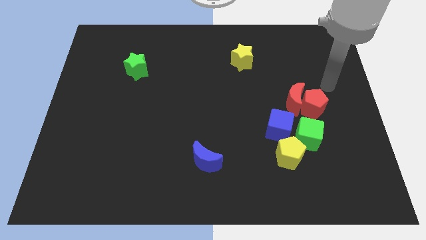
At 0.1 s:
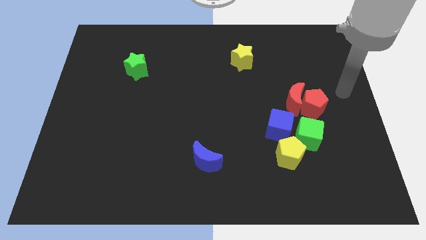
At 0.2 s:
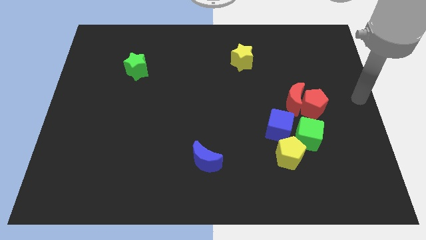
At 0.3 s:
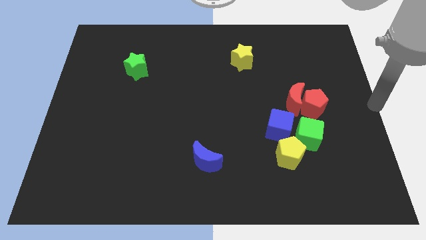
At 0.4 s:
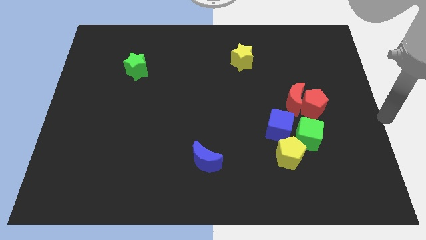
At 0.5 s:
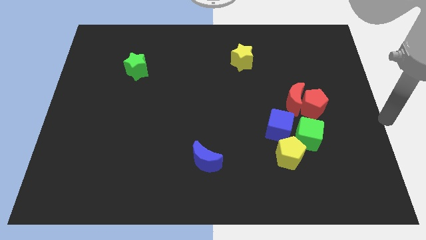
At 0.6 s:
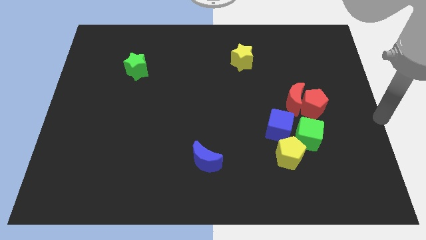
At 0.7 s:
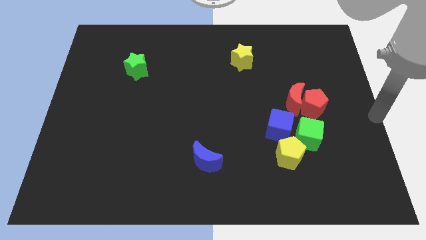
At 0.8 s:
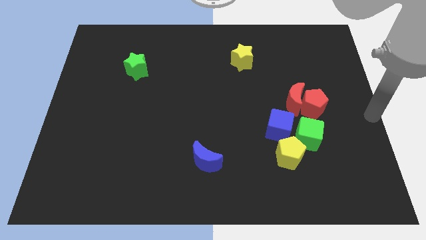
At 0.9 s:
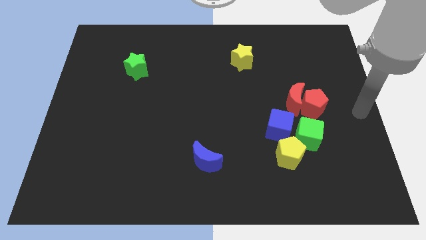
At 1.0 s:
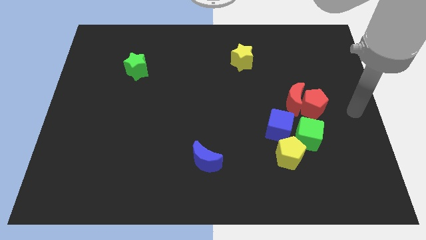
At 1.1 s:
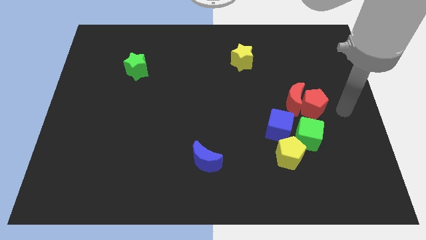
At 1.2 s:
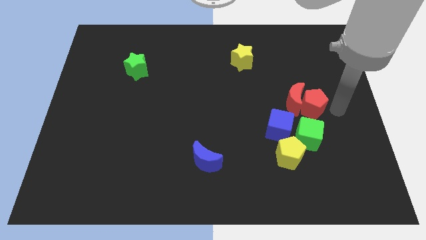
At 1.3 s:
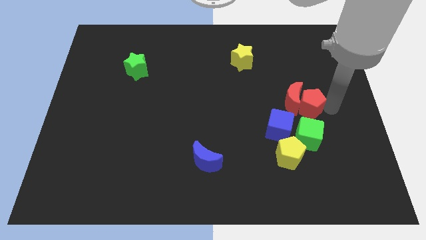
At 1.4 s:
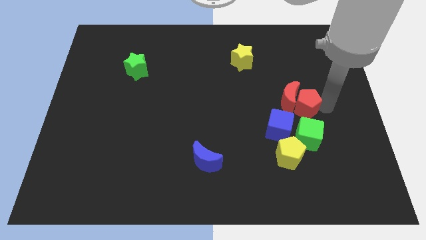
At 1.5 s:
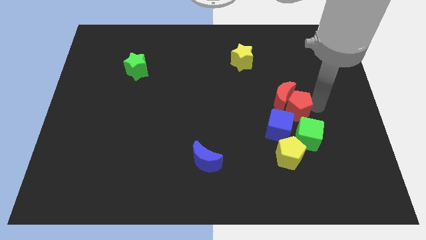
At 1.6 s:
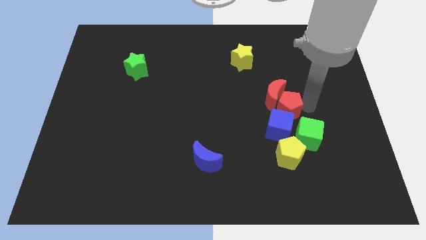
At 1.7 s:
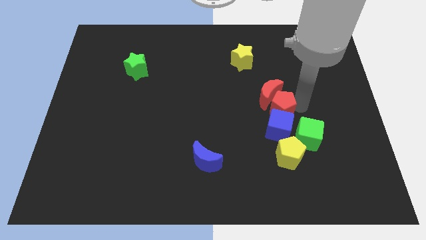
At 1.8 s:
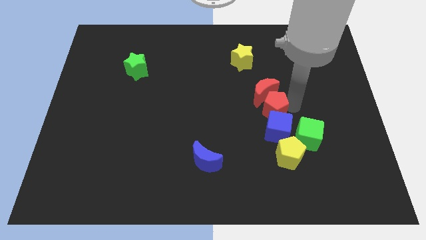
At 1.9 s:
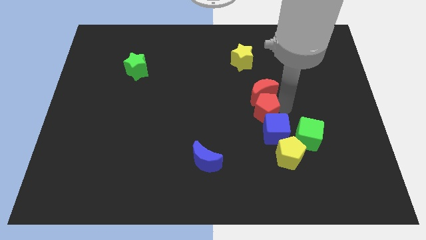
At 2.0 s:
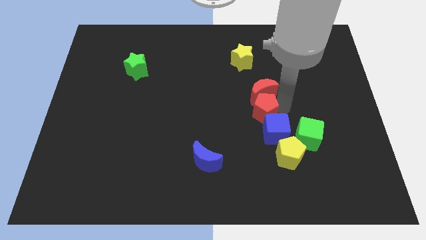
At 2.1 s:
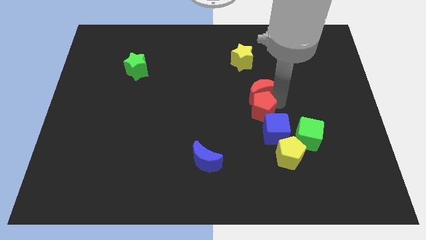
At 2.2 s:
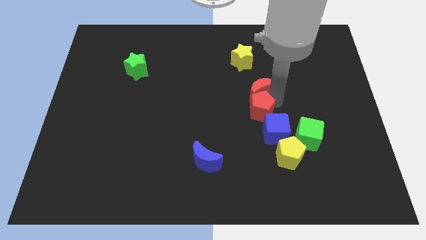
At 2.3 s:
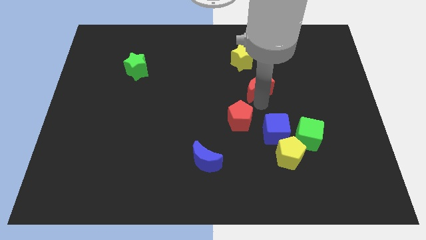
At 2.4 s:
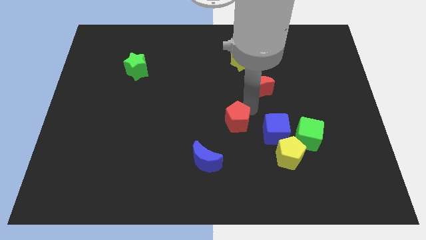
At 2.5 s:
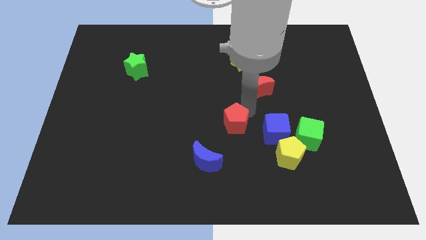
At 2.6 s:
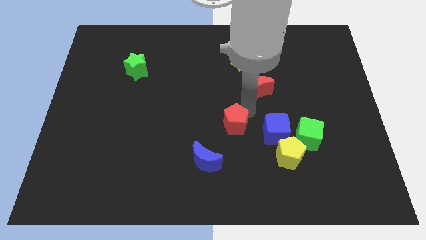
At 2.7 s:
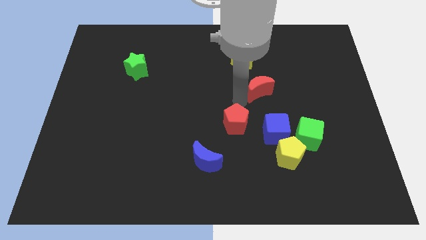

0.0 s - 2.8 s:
separate the red blocks

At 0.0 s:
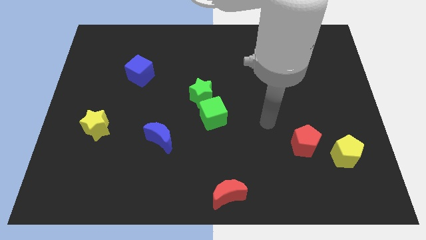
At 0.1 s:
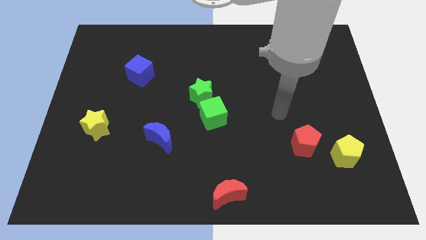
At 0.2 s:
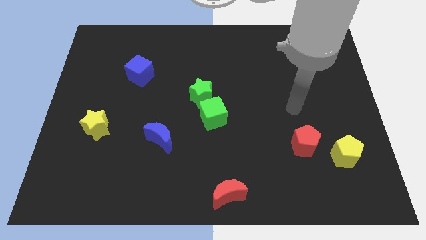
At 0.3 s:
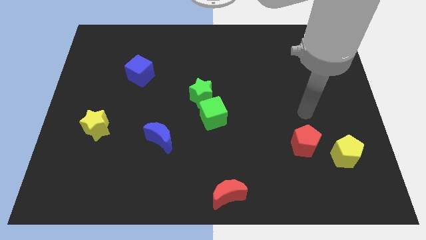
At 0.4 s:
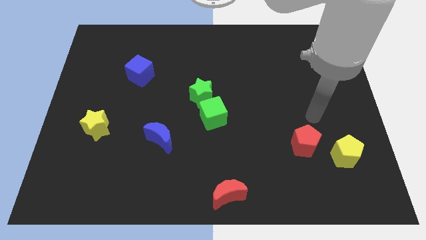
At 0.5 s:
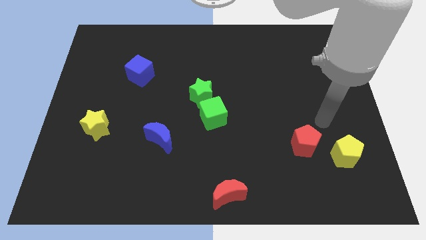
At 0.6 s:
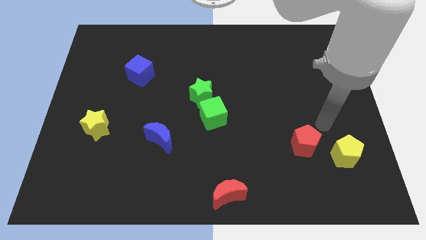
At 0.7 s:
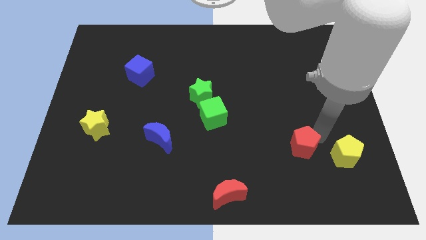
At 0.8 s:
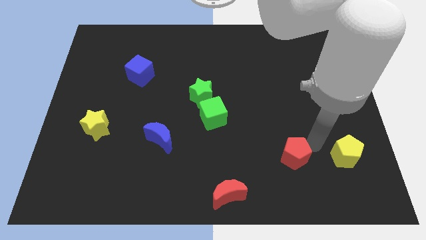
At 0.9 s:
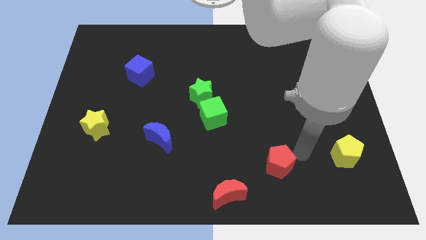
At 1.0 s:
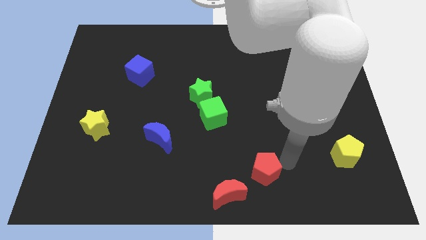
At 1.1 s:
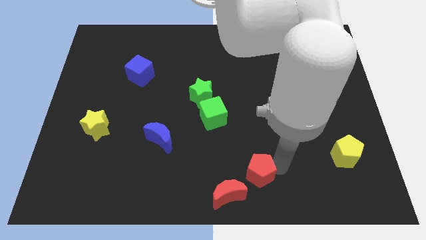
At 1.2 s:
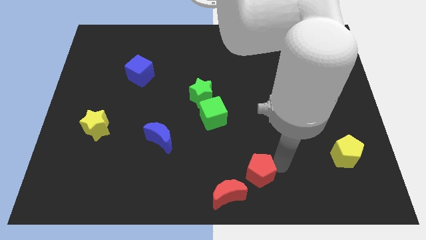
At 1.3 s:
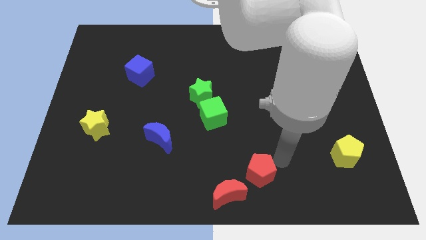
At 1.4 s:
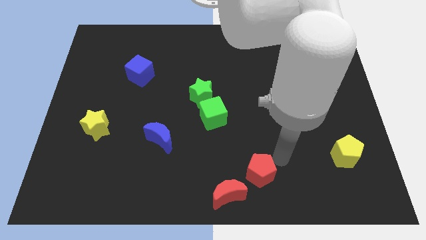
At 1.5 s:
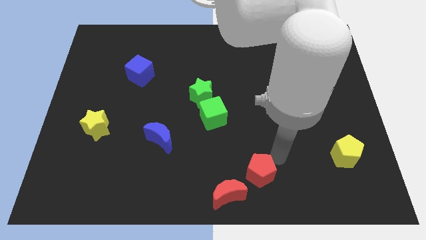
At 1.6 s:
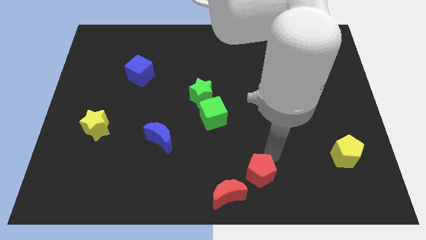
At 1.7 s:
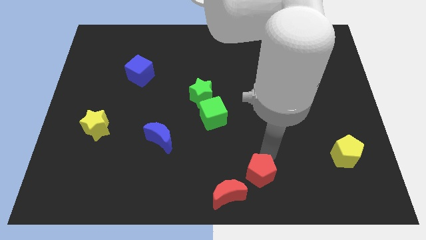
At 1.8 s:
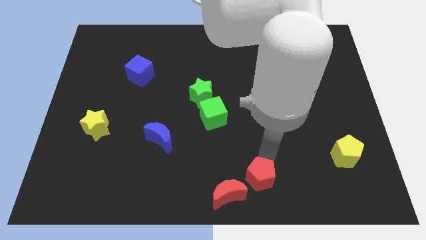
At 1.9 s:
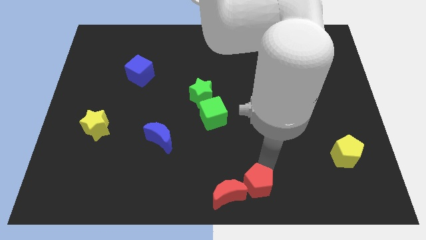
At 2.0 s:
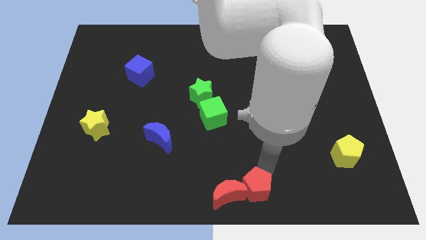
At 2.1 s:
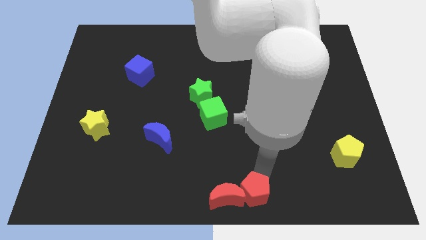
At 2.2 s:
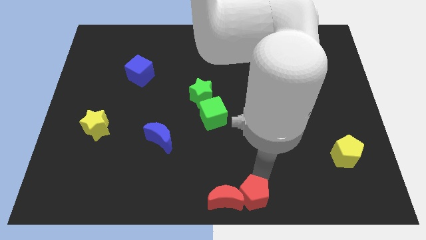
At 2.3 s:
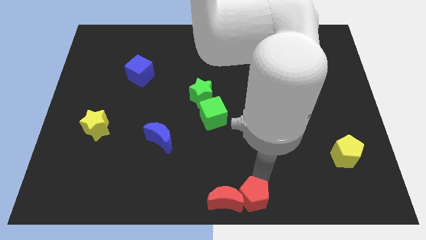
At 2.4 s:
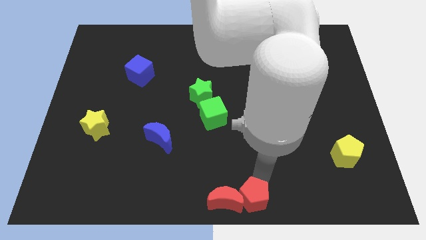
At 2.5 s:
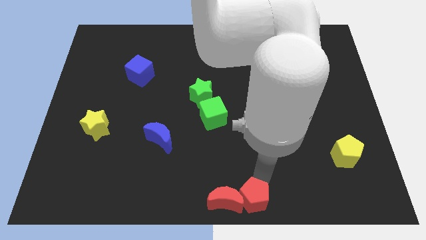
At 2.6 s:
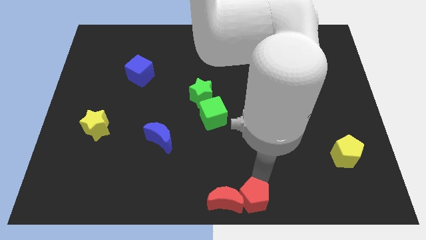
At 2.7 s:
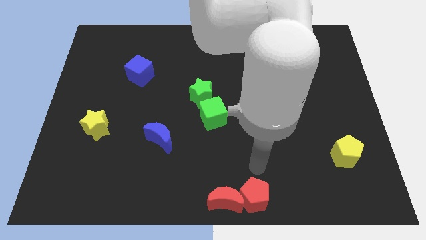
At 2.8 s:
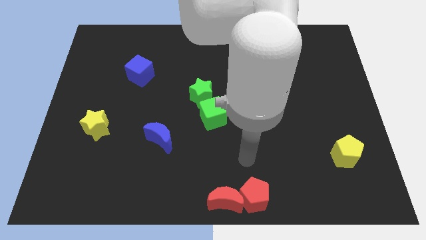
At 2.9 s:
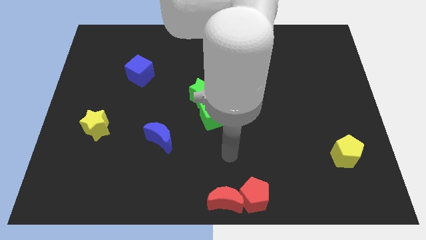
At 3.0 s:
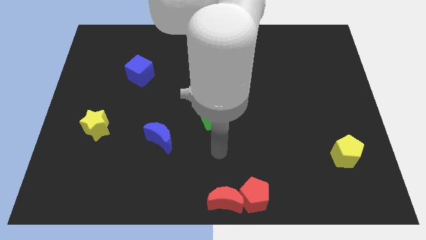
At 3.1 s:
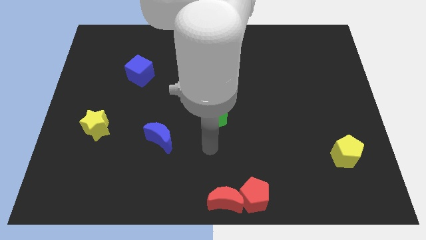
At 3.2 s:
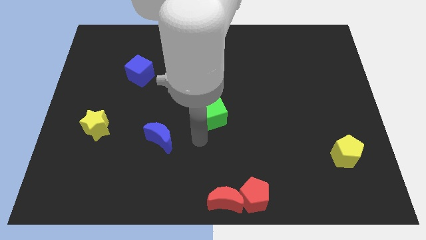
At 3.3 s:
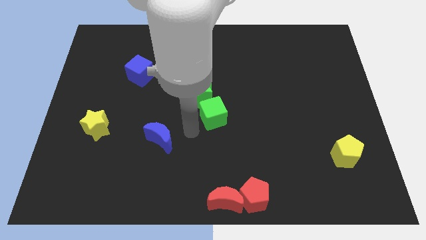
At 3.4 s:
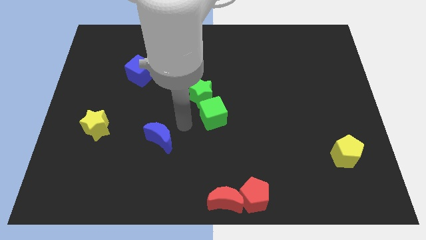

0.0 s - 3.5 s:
place the red pentagon towards the right side of the red crescent

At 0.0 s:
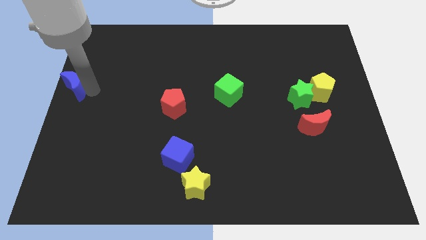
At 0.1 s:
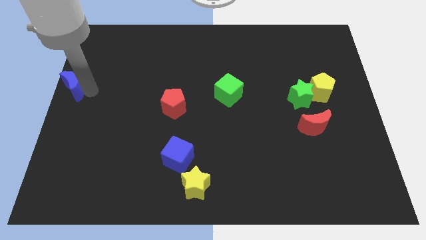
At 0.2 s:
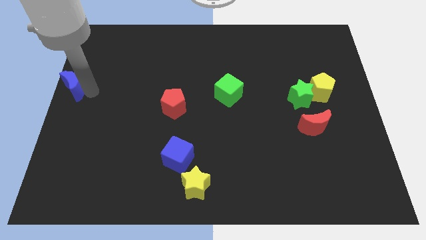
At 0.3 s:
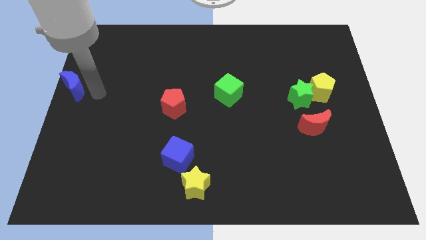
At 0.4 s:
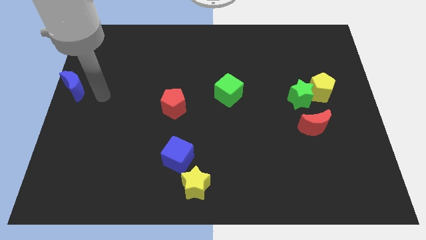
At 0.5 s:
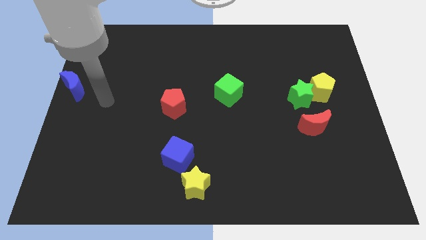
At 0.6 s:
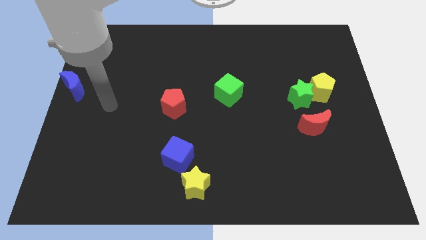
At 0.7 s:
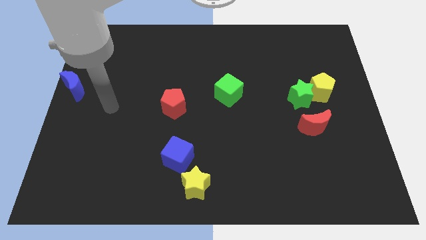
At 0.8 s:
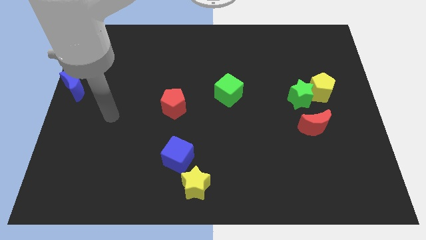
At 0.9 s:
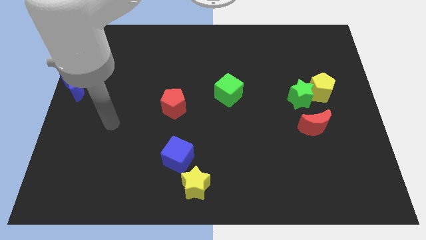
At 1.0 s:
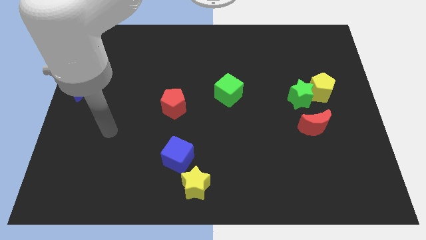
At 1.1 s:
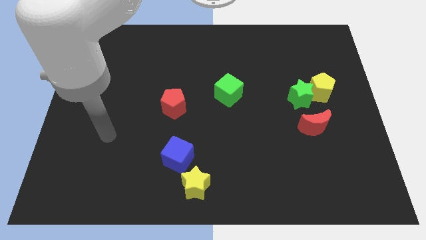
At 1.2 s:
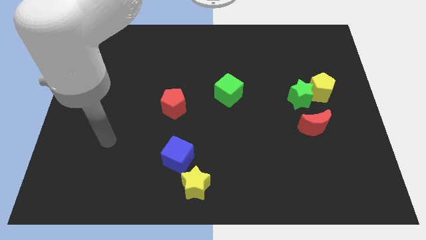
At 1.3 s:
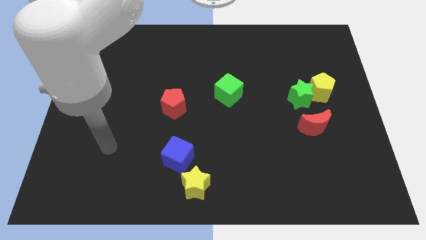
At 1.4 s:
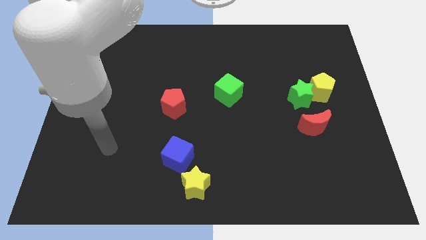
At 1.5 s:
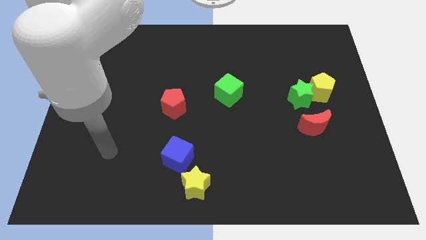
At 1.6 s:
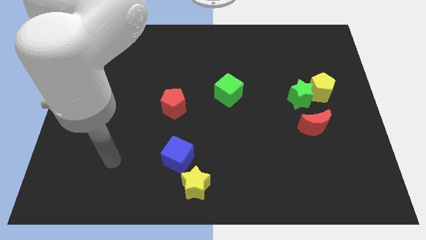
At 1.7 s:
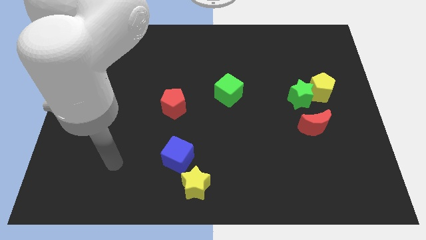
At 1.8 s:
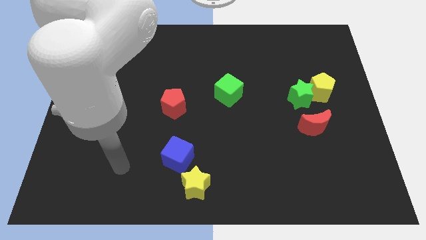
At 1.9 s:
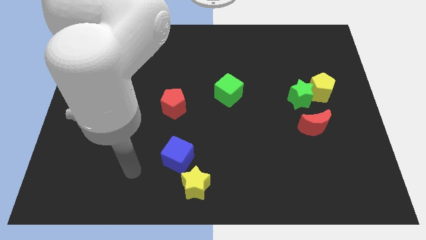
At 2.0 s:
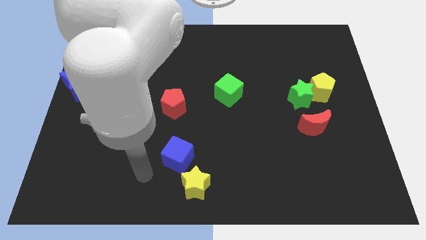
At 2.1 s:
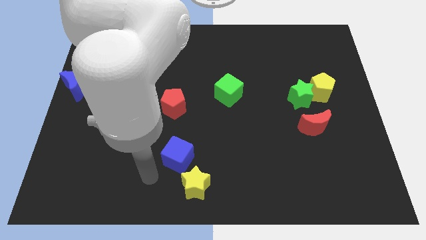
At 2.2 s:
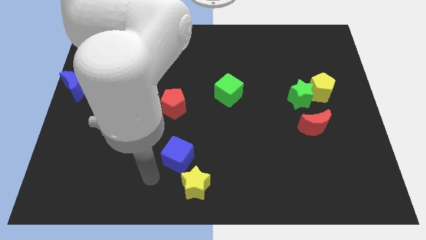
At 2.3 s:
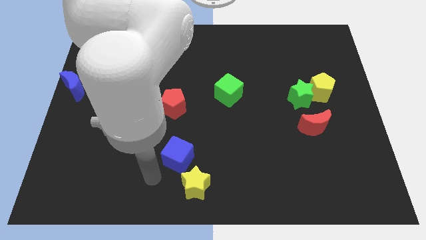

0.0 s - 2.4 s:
move your arm away from the blue moon

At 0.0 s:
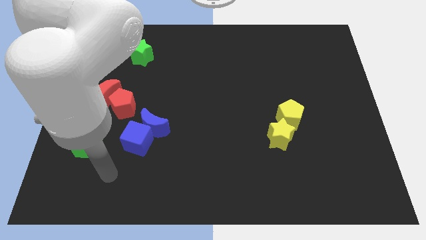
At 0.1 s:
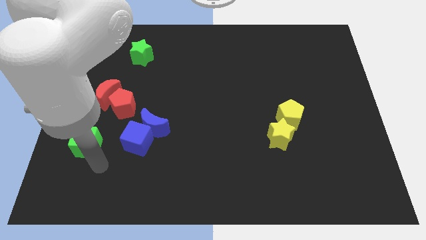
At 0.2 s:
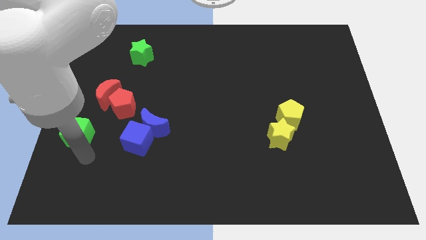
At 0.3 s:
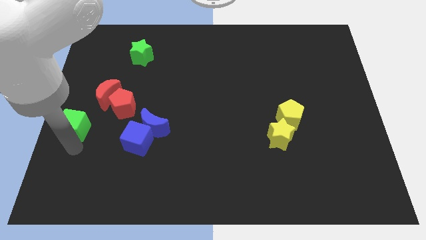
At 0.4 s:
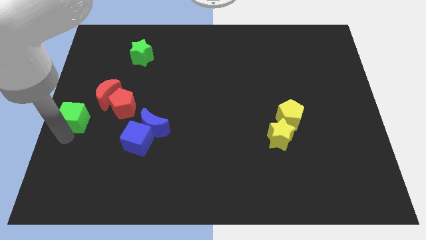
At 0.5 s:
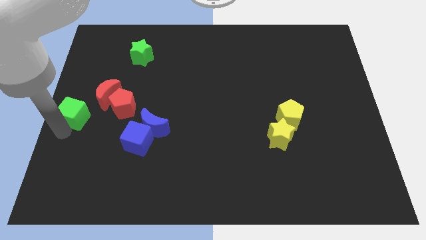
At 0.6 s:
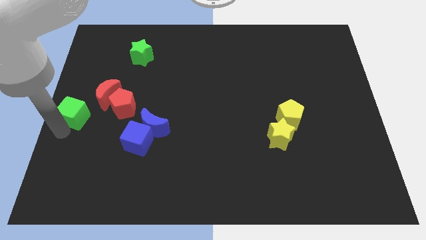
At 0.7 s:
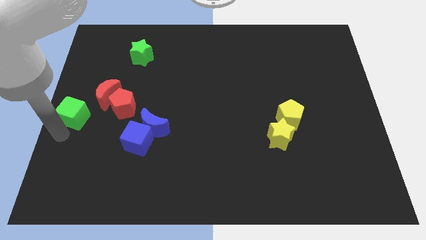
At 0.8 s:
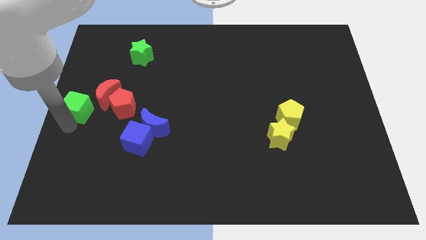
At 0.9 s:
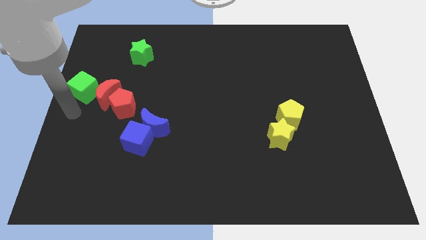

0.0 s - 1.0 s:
move the green cube to the left of the red moon
